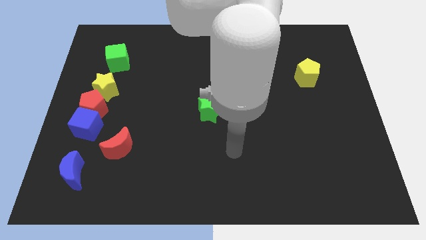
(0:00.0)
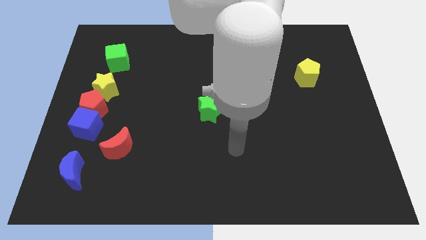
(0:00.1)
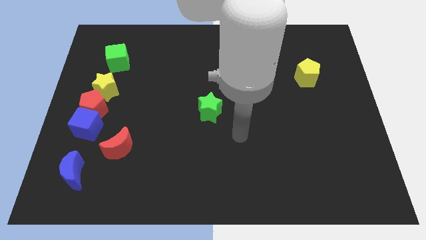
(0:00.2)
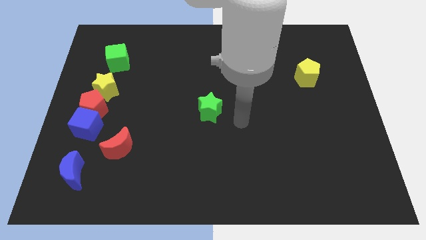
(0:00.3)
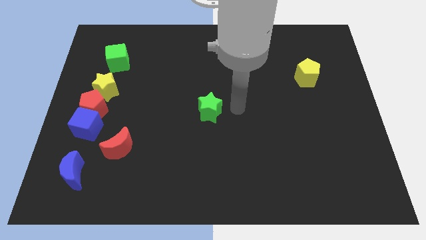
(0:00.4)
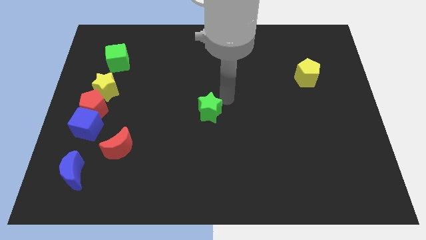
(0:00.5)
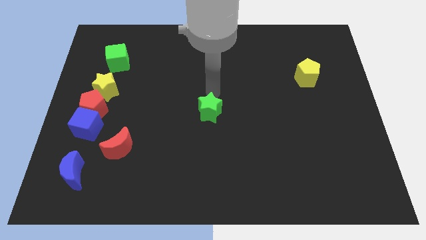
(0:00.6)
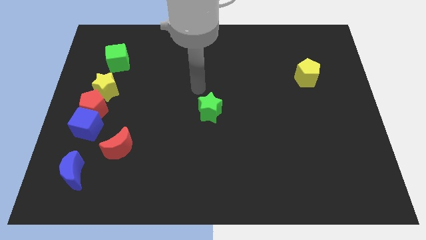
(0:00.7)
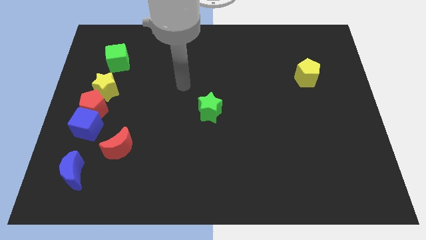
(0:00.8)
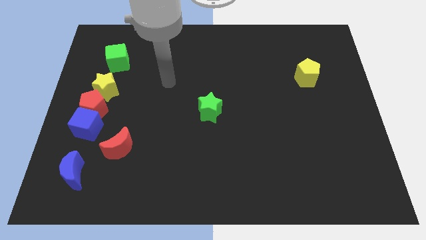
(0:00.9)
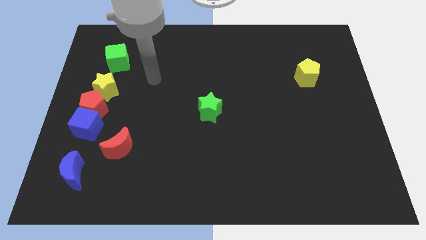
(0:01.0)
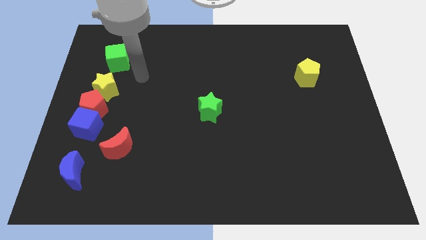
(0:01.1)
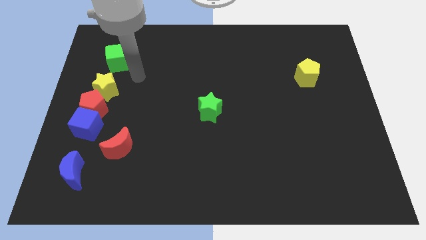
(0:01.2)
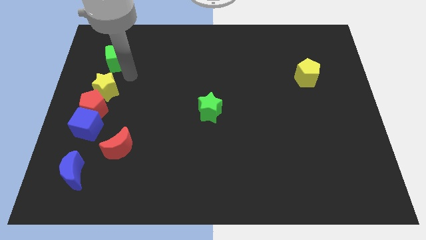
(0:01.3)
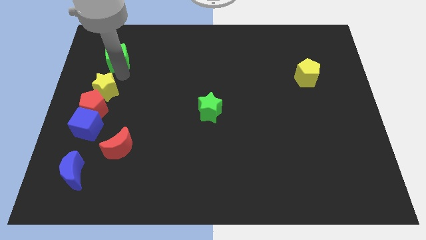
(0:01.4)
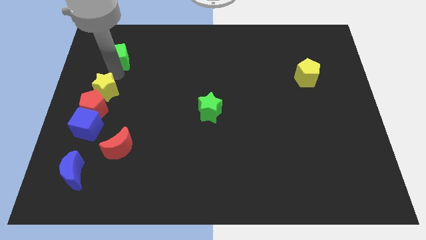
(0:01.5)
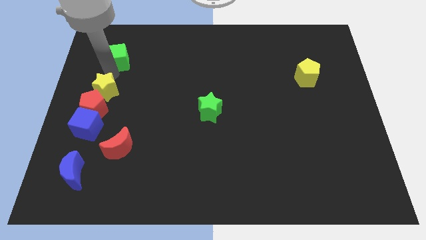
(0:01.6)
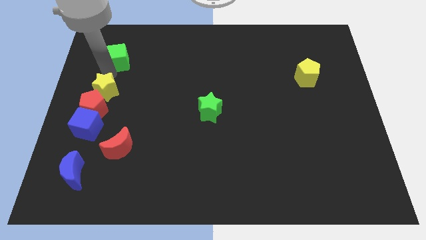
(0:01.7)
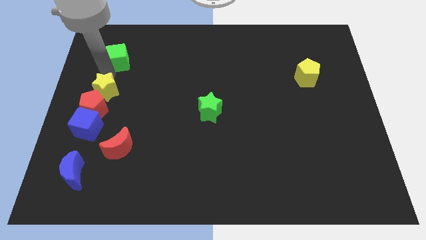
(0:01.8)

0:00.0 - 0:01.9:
move your arm on top of the yellow star

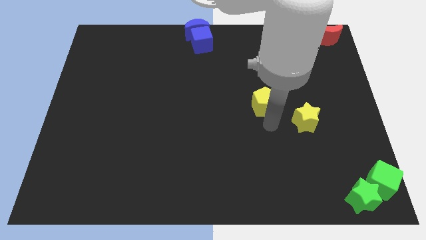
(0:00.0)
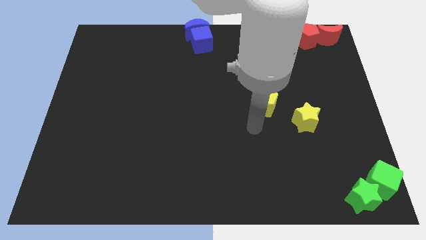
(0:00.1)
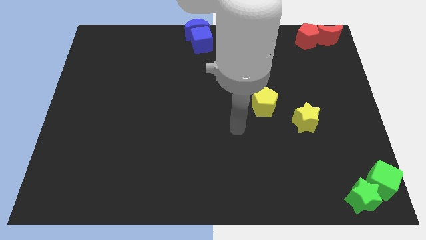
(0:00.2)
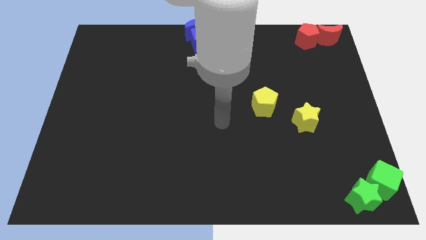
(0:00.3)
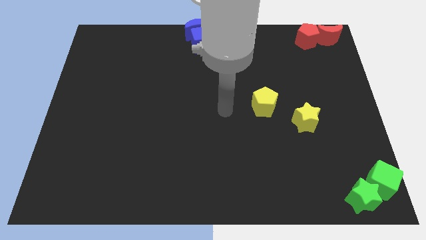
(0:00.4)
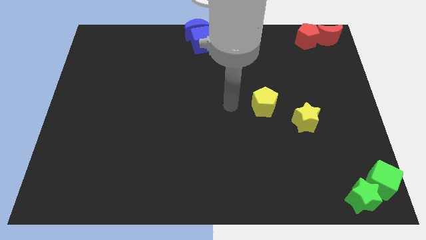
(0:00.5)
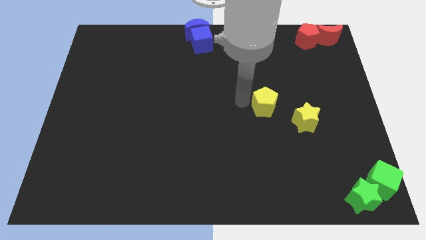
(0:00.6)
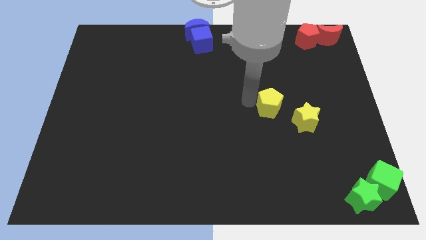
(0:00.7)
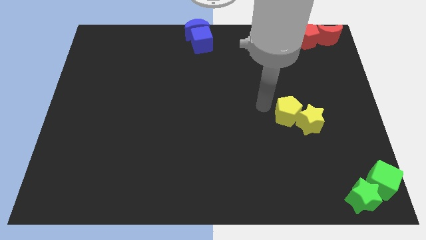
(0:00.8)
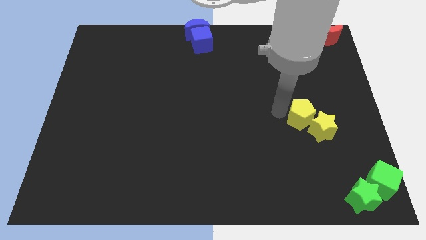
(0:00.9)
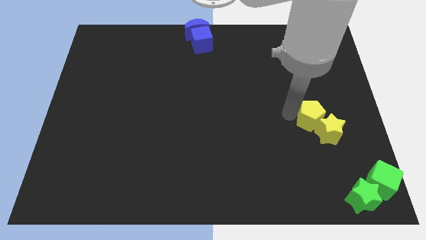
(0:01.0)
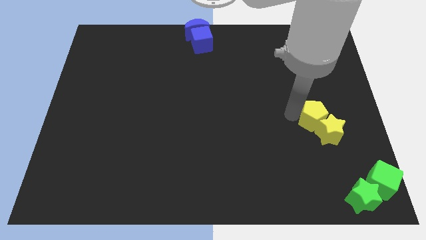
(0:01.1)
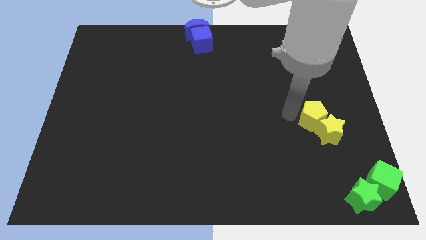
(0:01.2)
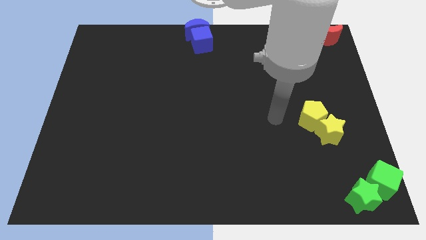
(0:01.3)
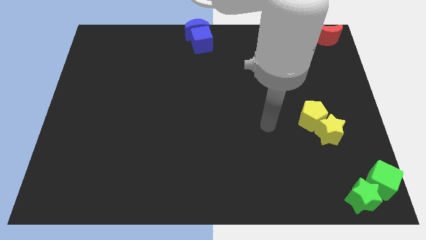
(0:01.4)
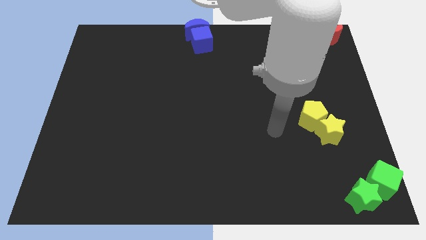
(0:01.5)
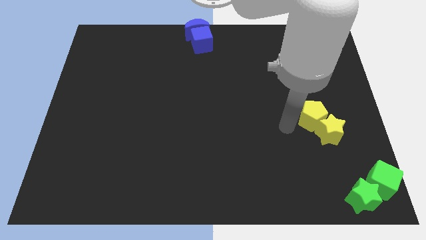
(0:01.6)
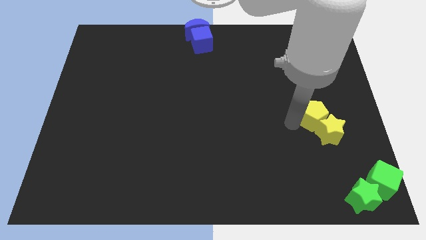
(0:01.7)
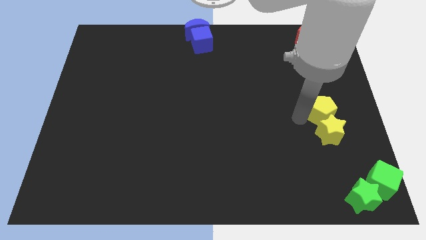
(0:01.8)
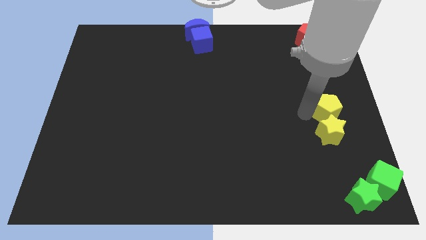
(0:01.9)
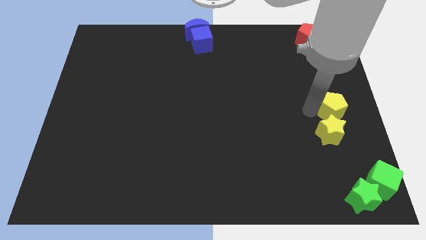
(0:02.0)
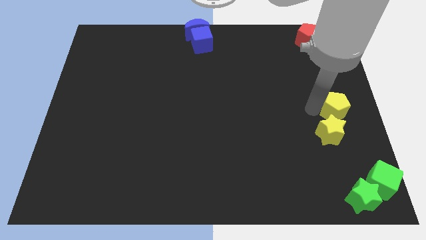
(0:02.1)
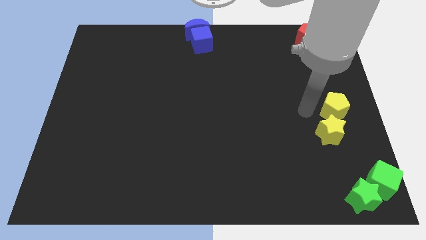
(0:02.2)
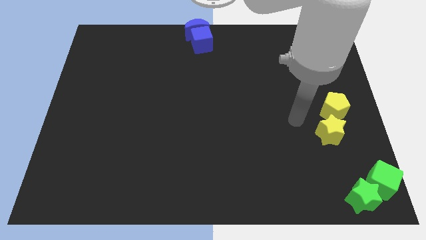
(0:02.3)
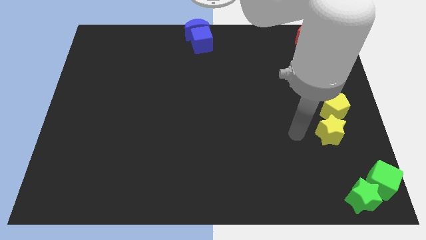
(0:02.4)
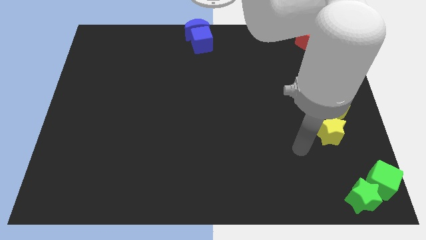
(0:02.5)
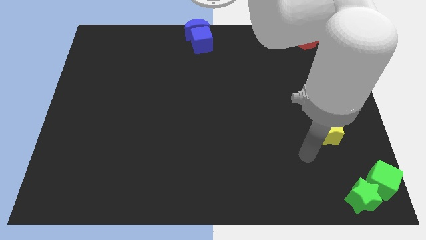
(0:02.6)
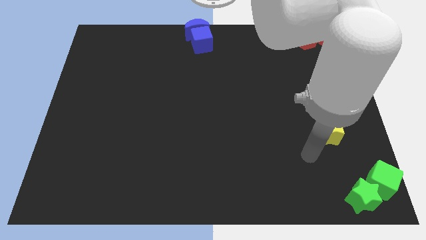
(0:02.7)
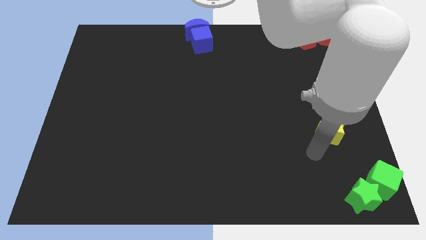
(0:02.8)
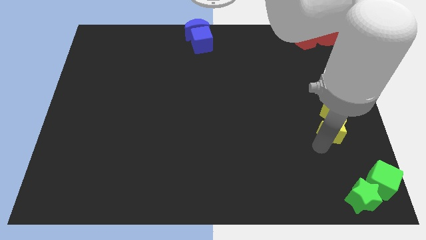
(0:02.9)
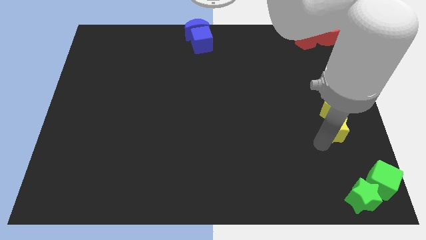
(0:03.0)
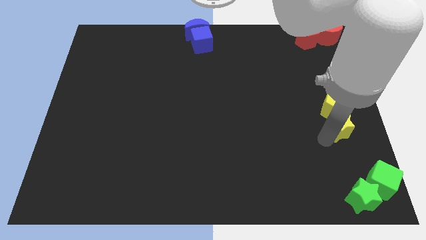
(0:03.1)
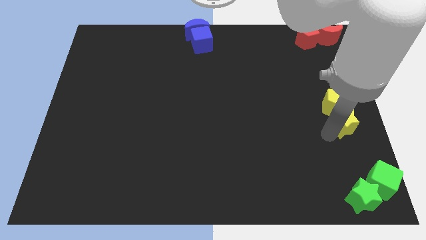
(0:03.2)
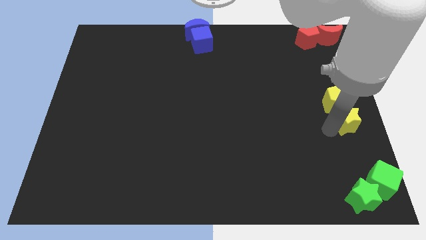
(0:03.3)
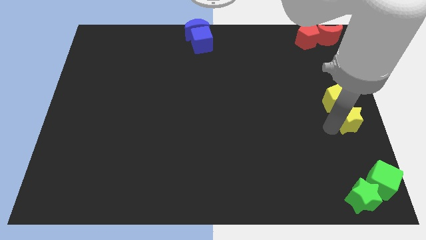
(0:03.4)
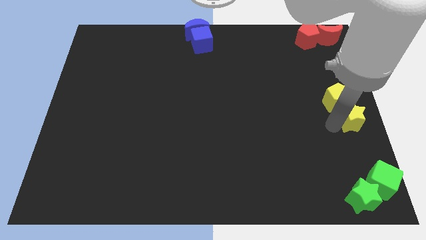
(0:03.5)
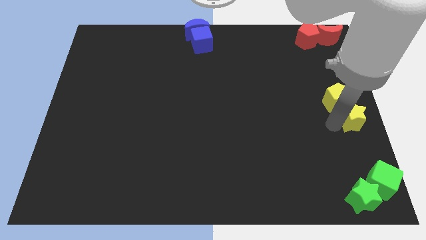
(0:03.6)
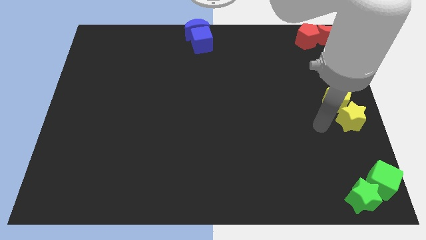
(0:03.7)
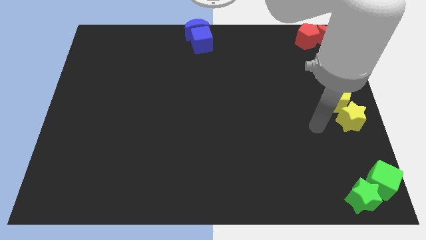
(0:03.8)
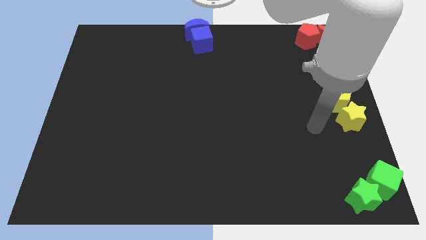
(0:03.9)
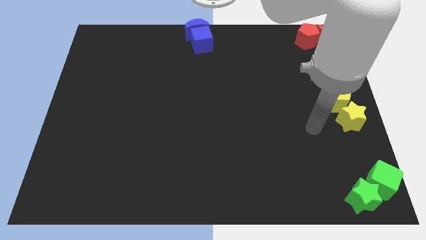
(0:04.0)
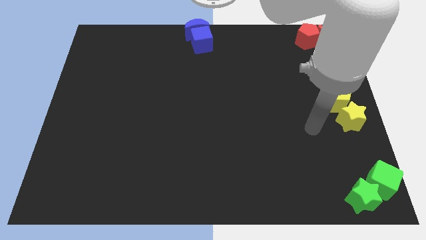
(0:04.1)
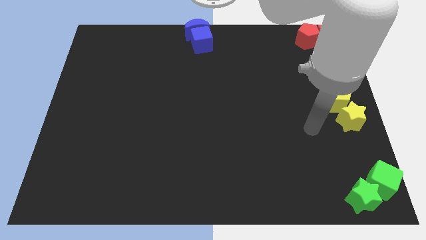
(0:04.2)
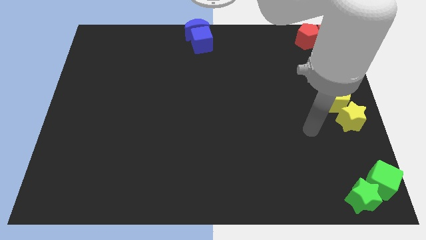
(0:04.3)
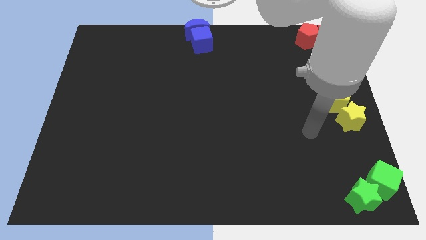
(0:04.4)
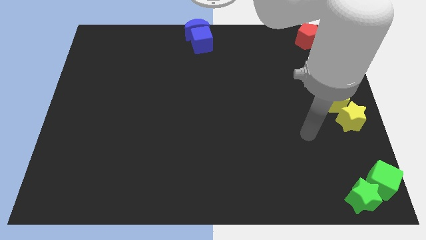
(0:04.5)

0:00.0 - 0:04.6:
move the yellow star and pentagon to the center right of the board

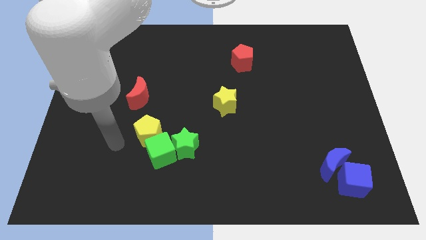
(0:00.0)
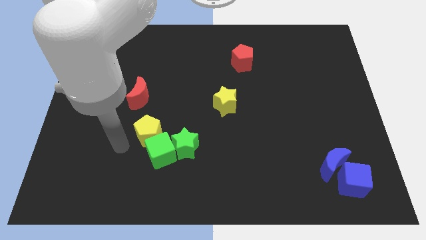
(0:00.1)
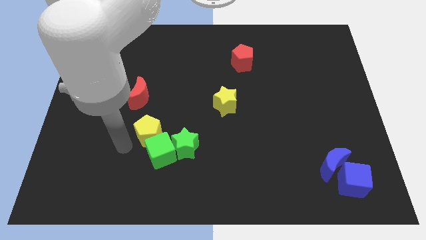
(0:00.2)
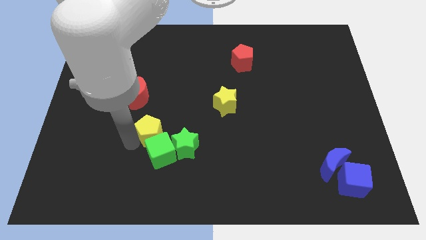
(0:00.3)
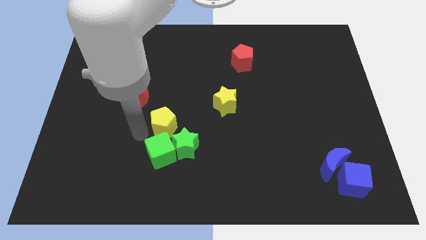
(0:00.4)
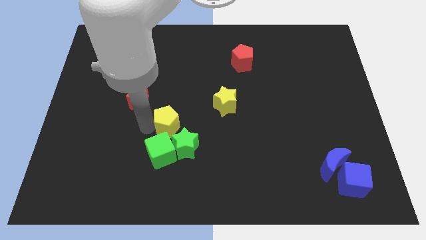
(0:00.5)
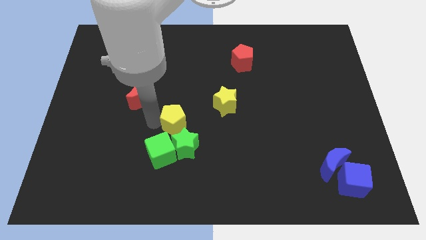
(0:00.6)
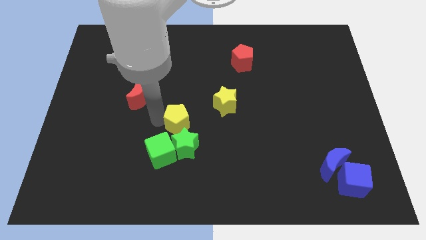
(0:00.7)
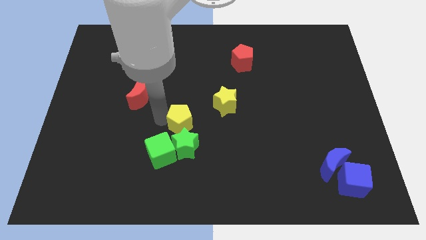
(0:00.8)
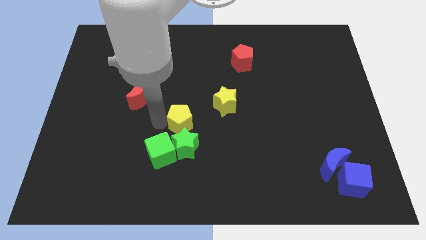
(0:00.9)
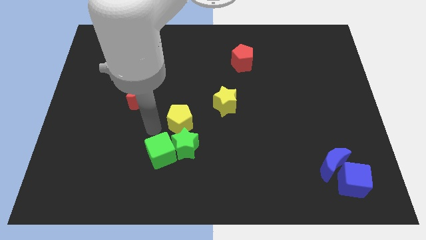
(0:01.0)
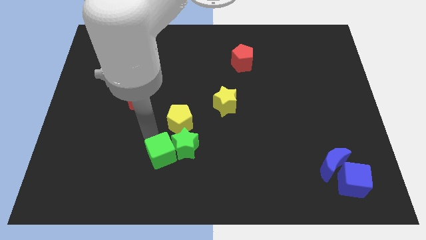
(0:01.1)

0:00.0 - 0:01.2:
place the yellow pentagon above the green star

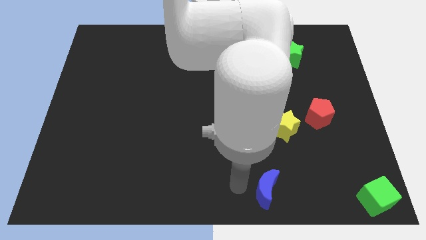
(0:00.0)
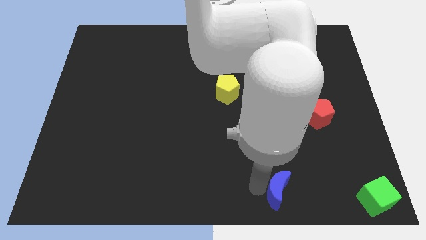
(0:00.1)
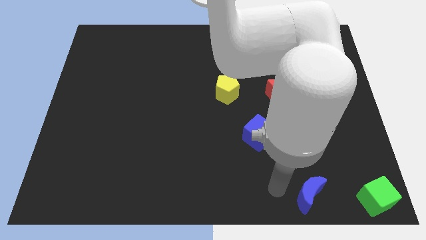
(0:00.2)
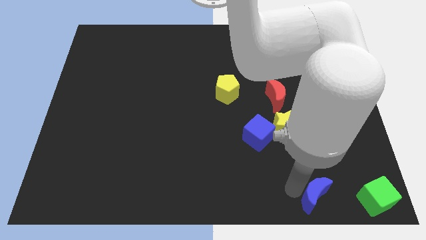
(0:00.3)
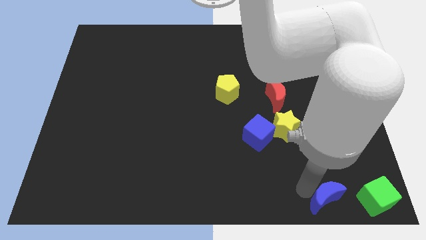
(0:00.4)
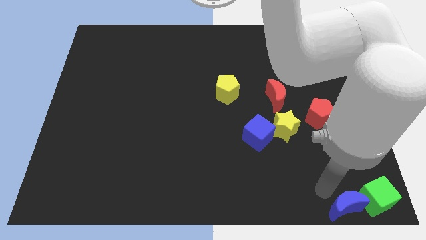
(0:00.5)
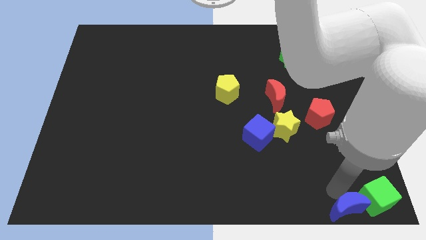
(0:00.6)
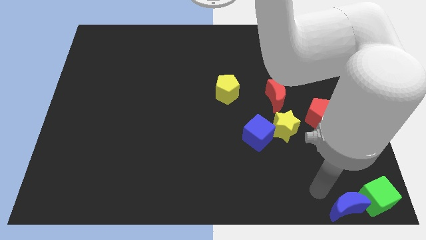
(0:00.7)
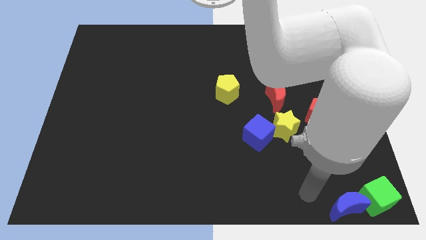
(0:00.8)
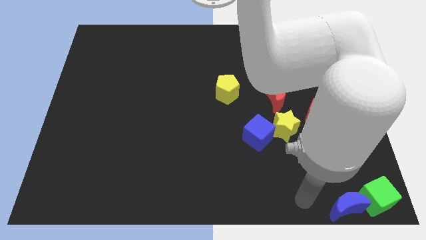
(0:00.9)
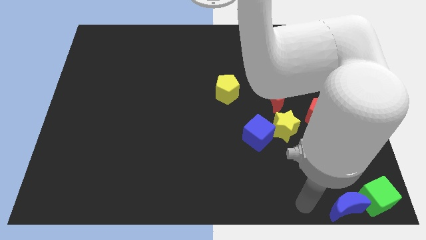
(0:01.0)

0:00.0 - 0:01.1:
push blue moon close to green cube

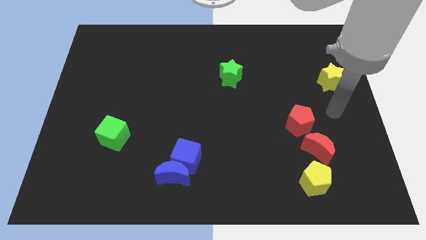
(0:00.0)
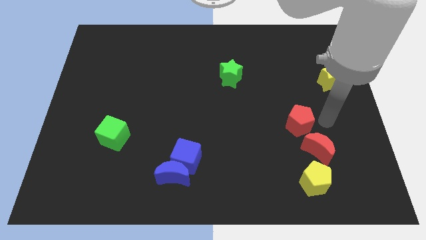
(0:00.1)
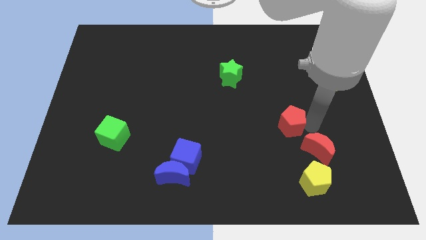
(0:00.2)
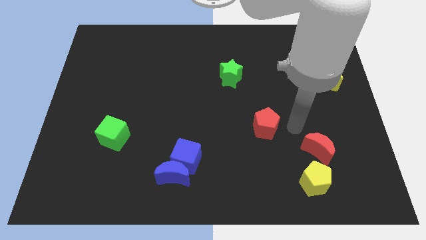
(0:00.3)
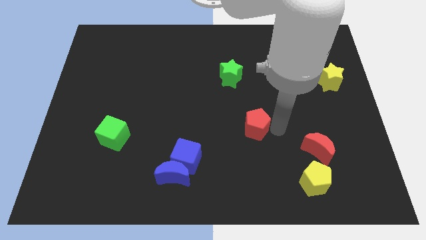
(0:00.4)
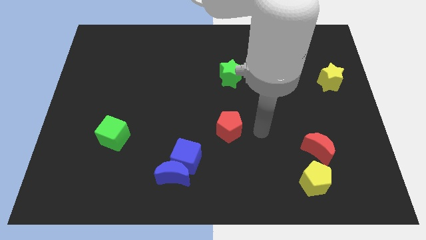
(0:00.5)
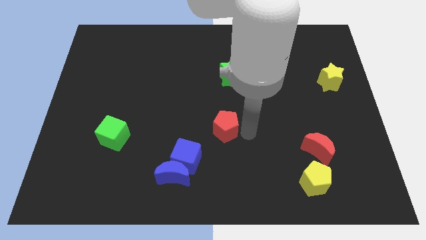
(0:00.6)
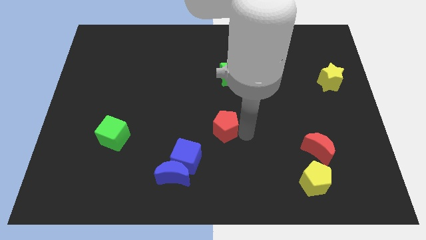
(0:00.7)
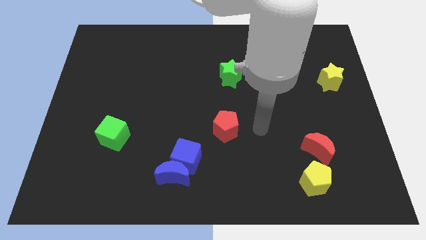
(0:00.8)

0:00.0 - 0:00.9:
move the red pentagon towards the centre of the board
